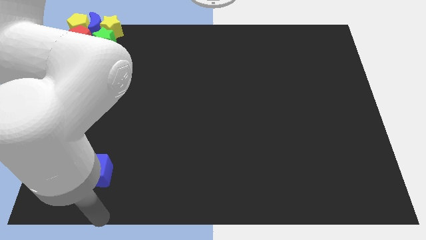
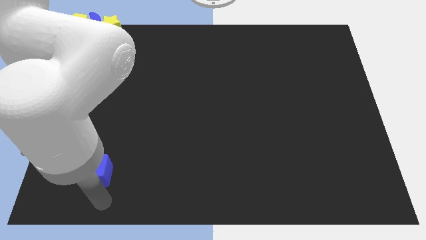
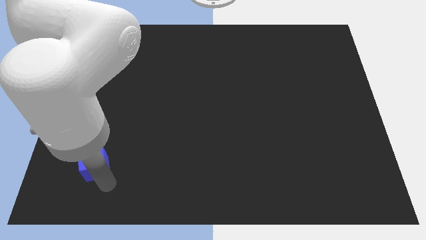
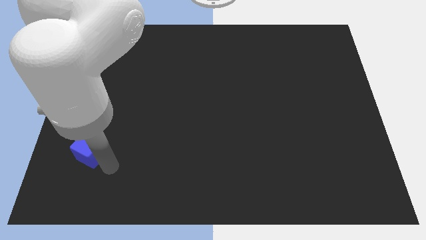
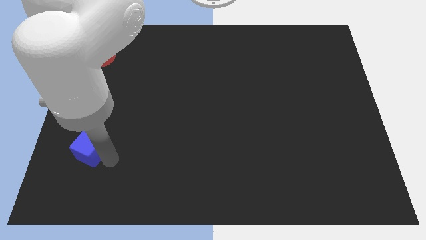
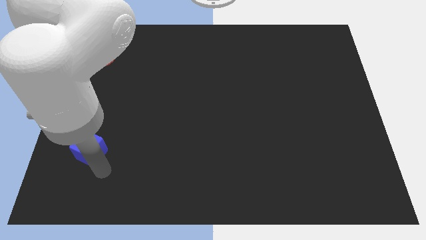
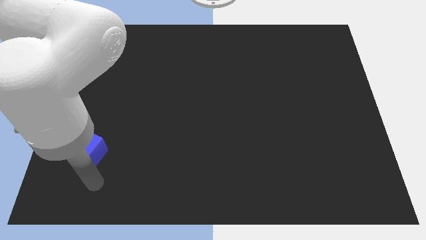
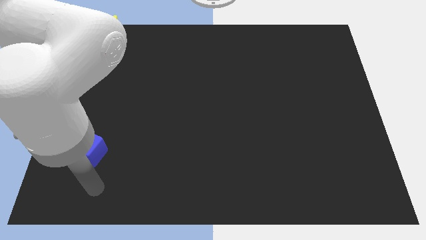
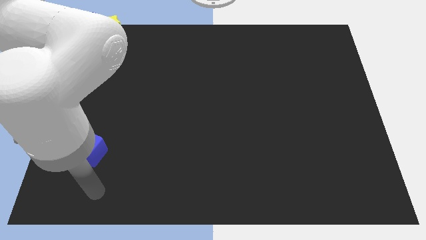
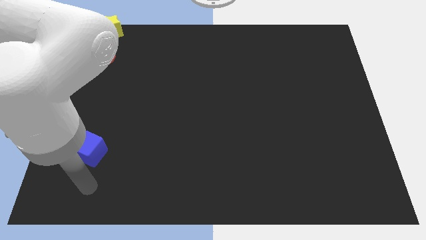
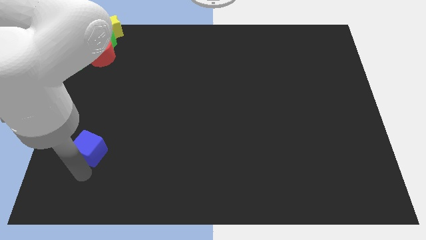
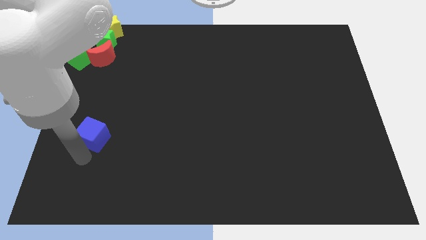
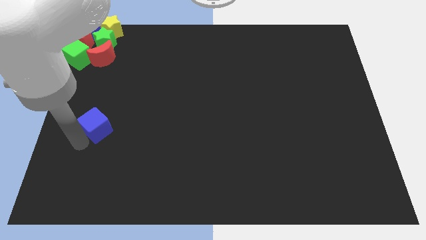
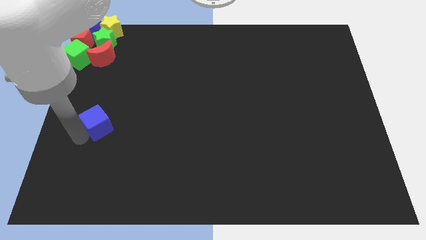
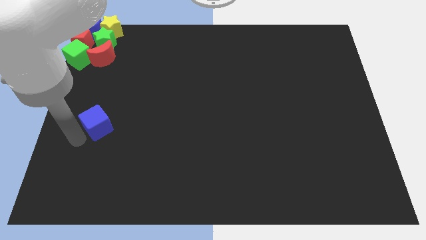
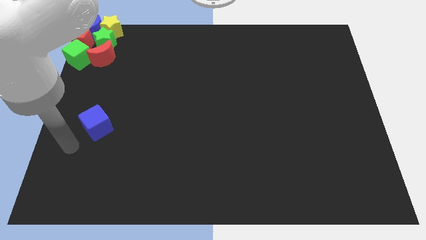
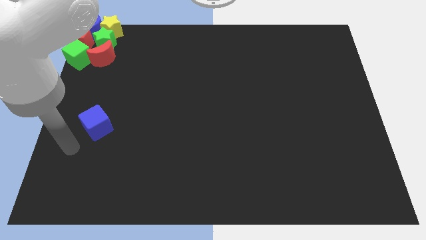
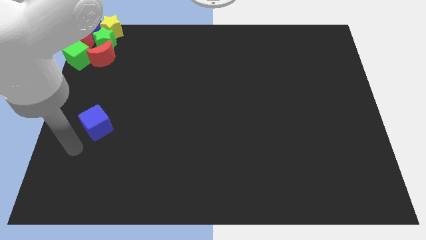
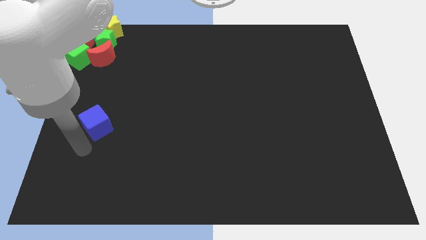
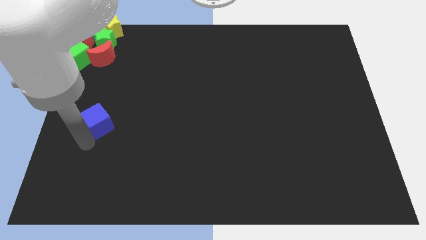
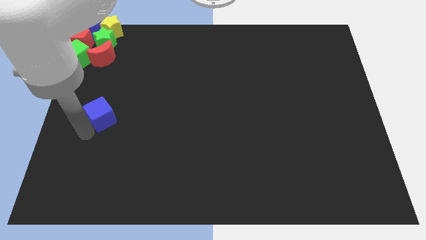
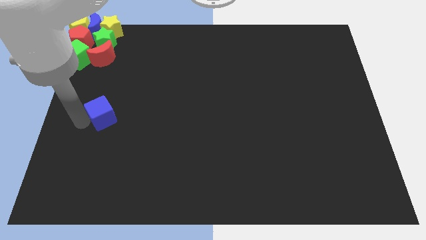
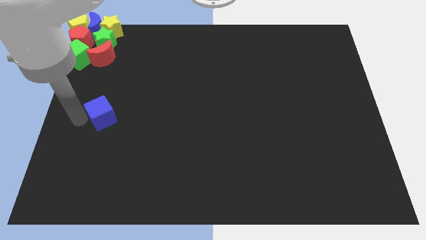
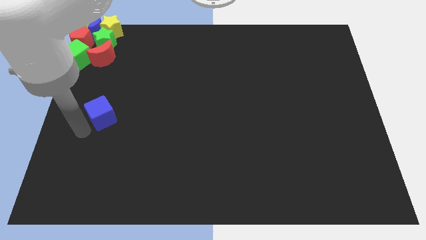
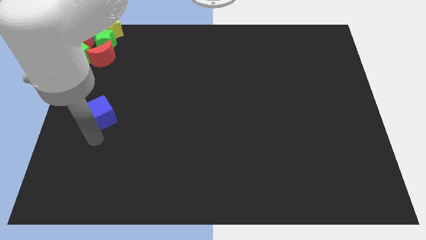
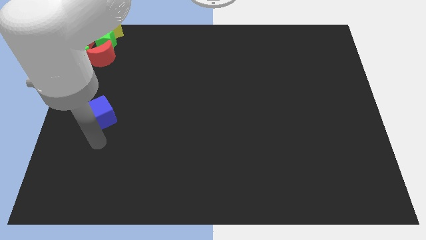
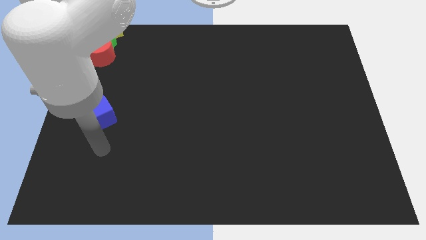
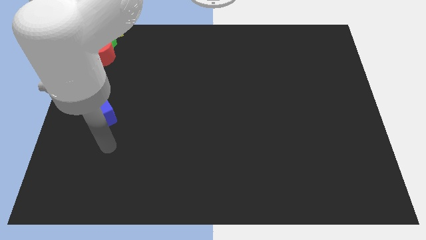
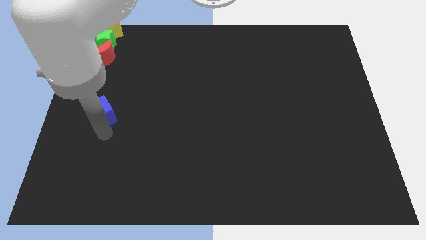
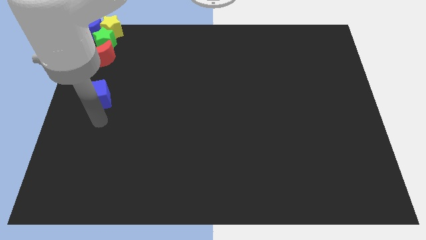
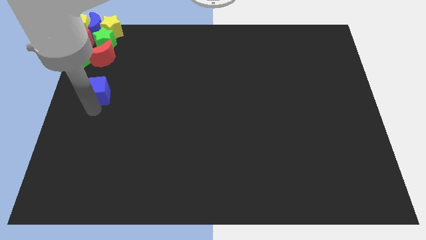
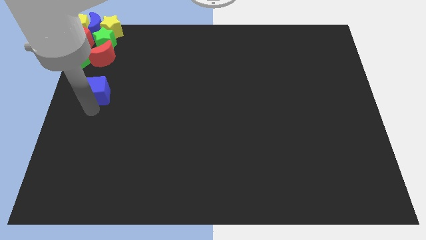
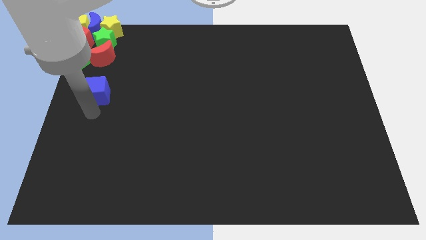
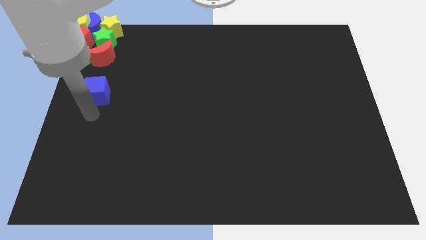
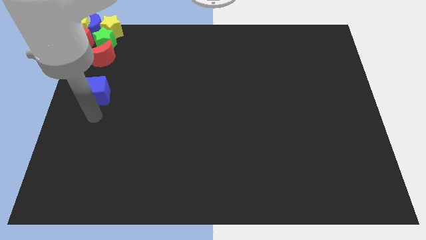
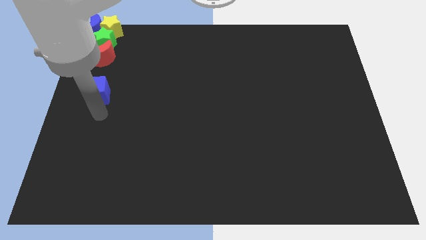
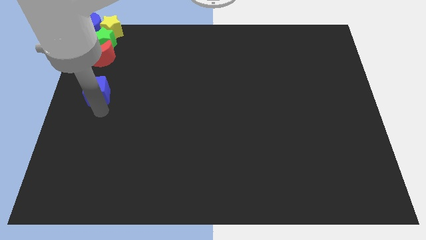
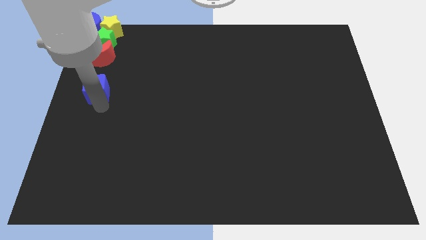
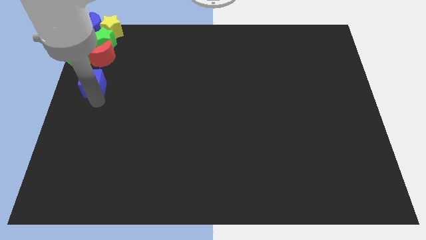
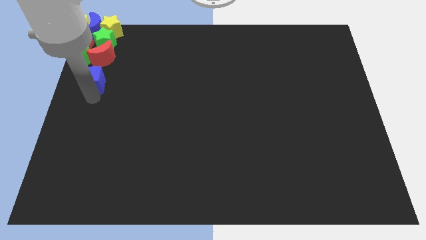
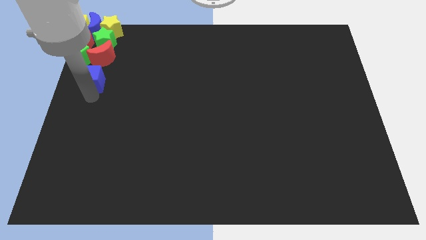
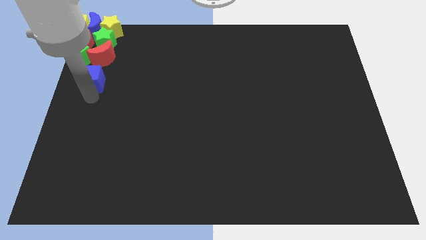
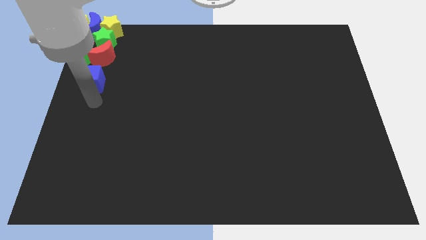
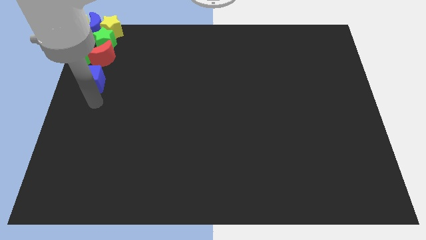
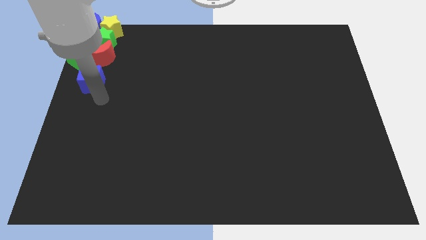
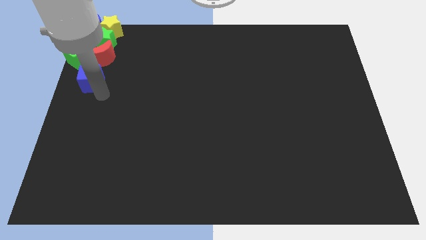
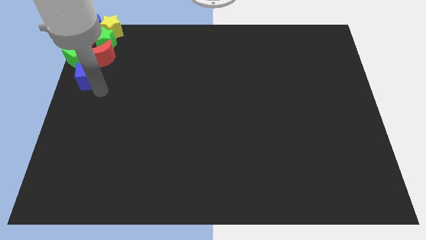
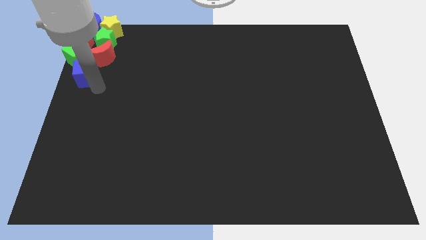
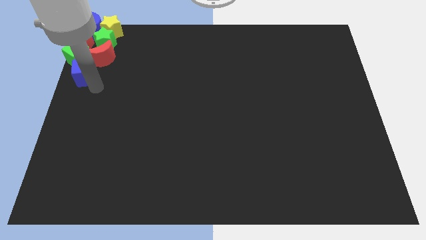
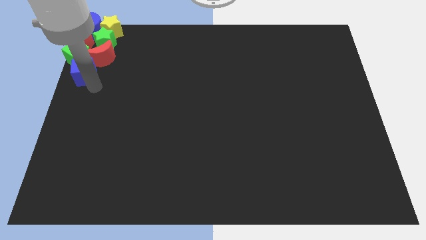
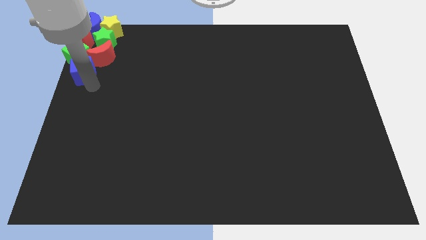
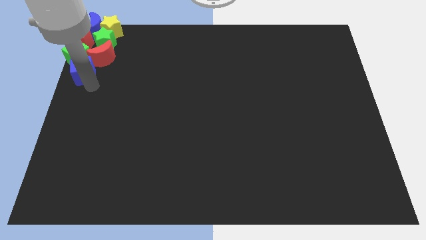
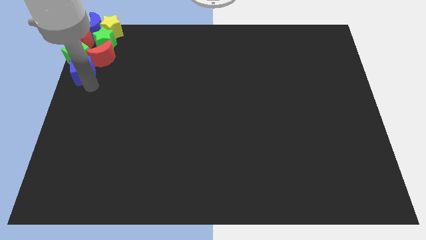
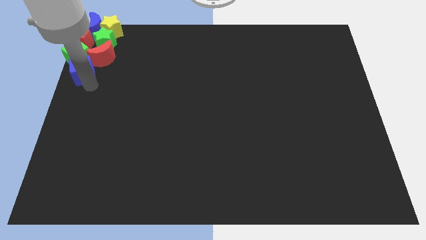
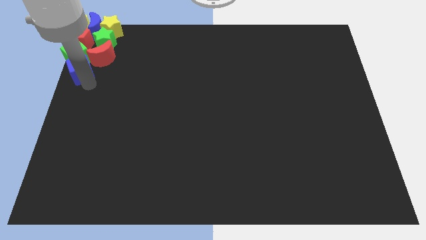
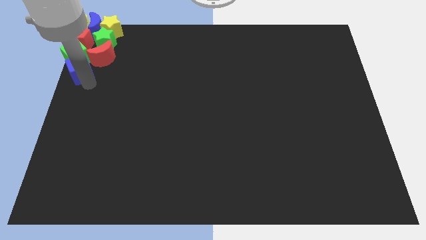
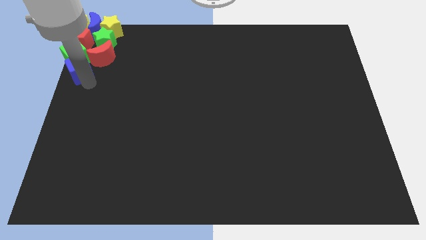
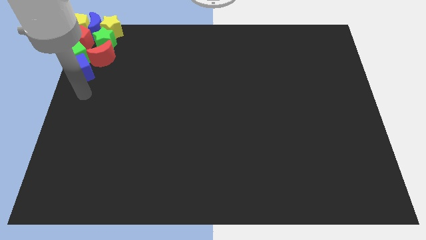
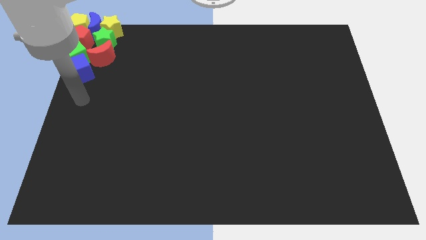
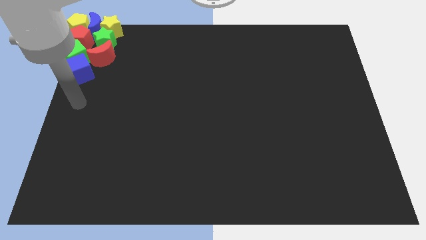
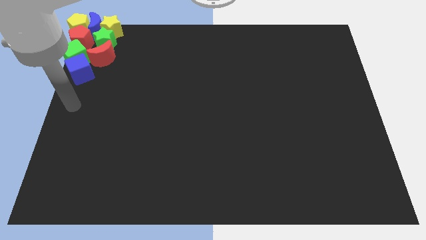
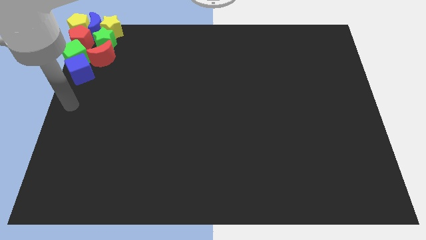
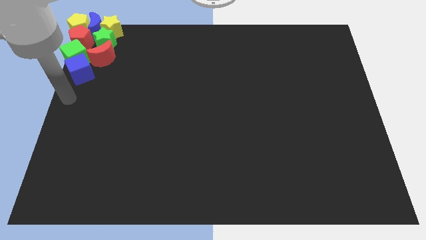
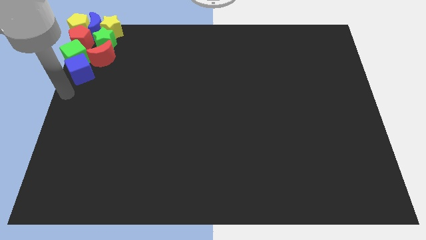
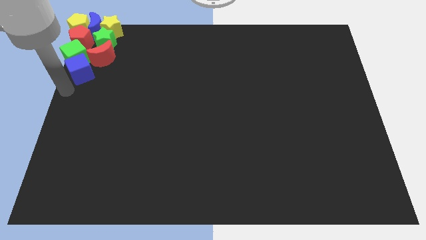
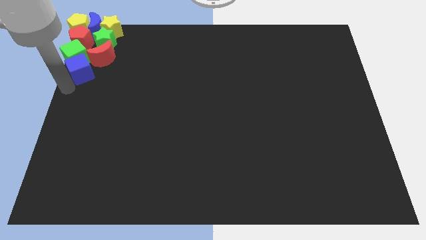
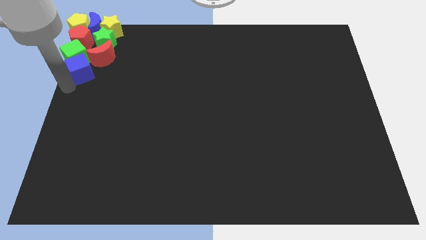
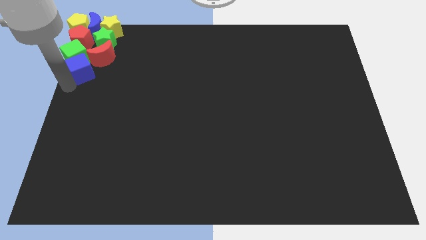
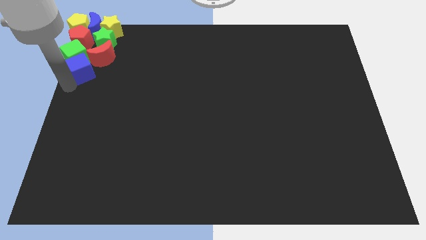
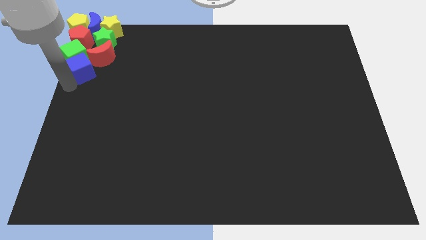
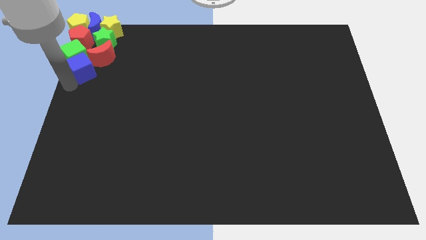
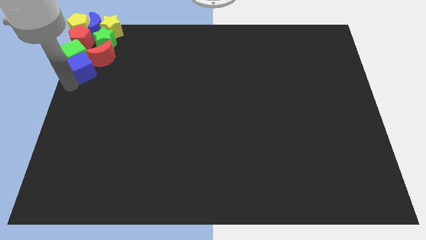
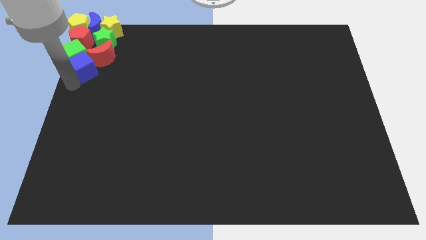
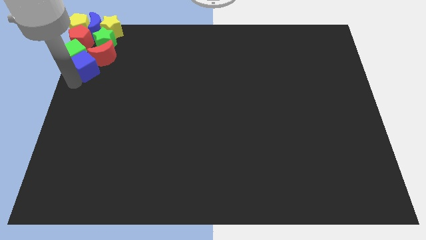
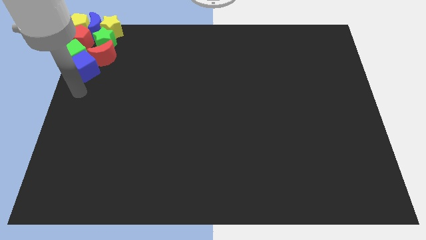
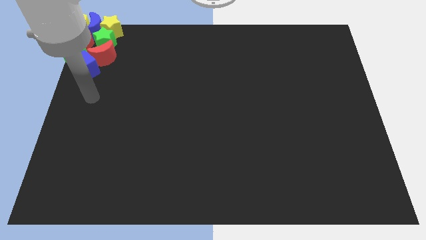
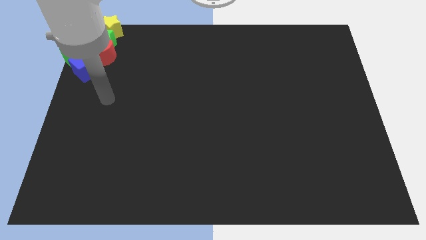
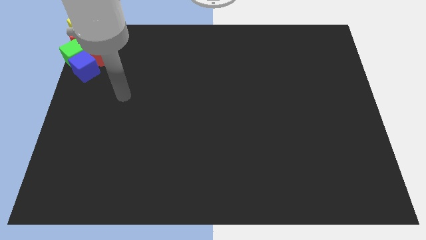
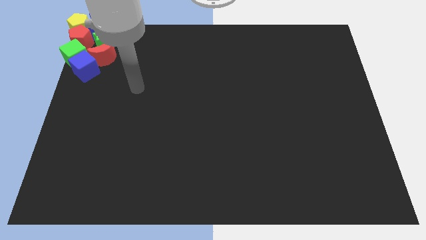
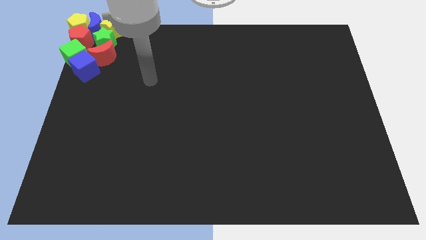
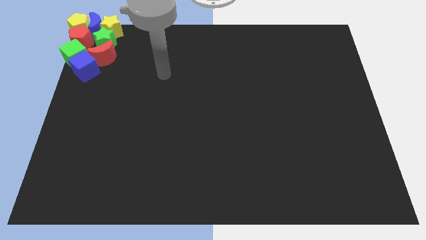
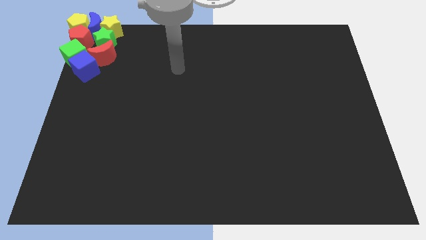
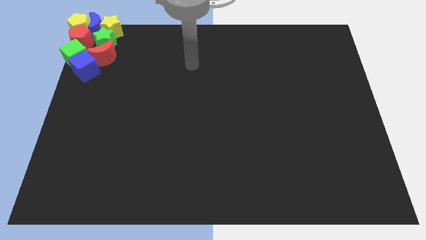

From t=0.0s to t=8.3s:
push the blue cube into the group of blocks

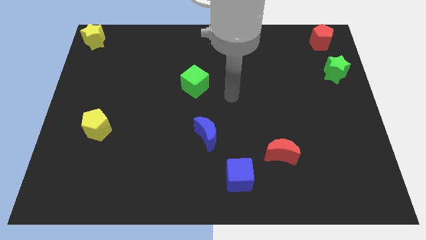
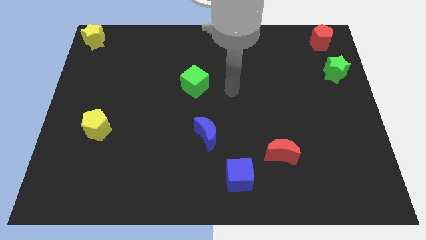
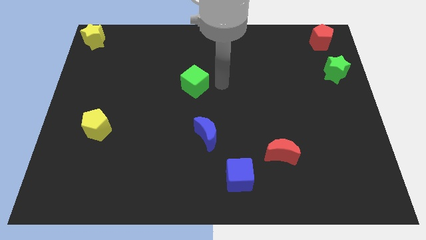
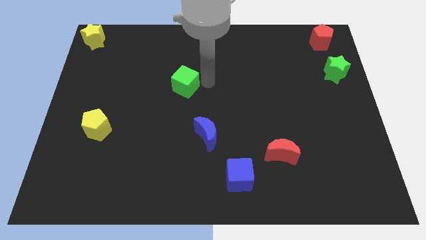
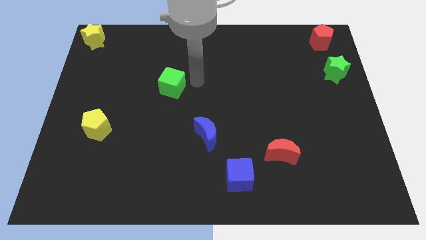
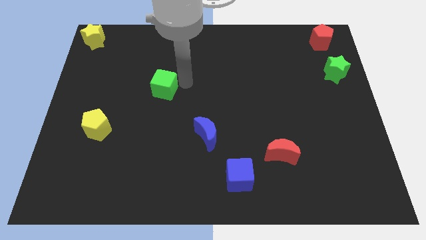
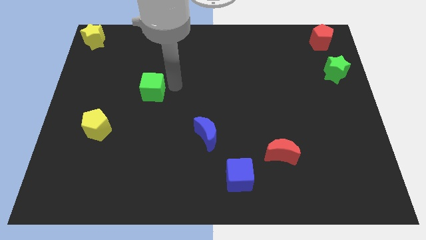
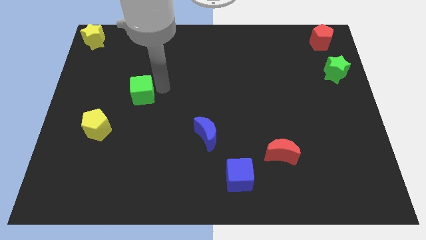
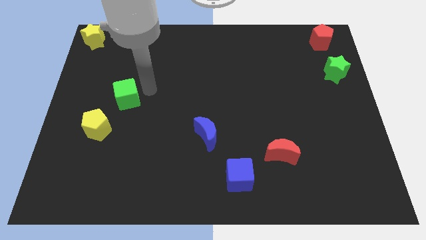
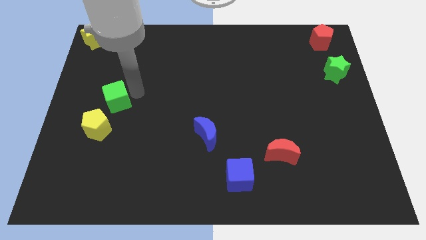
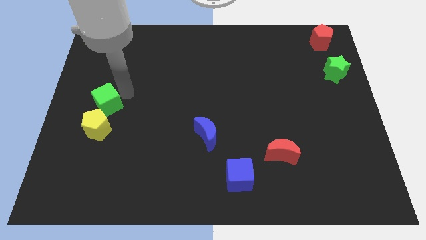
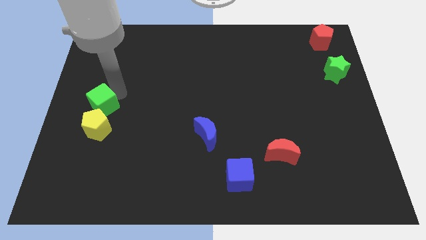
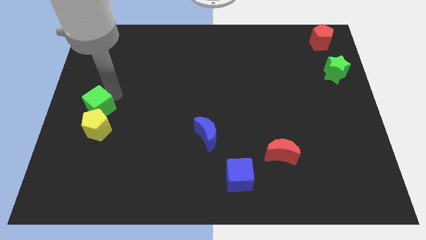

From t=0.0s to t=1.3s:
place green cube above yellow pentagon
